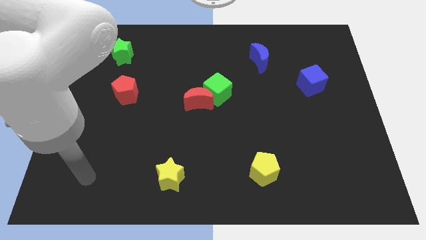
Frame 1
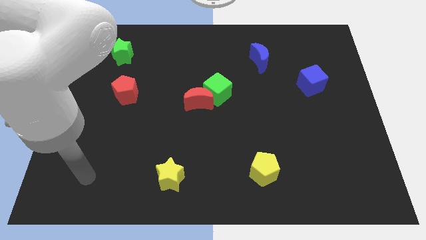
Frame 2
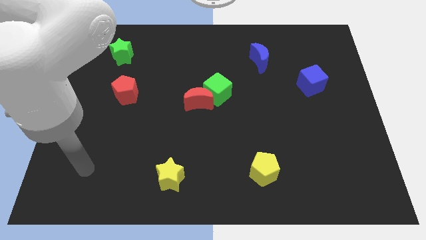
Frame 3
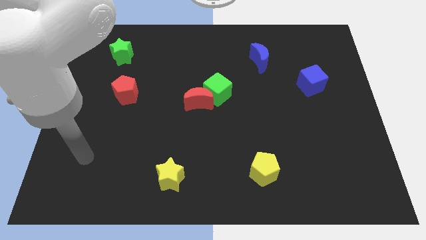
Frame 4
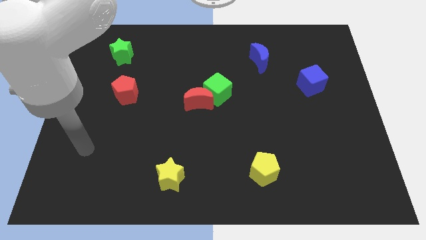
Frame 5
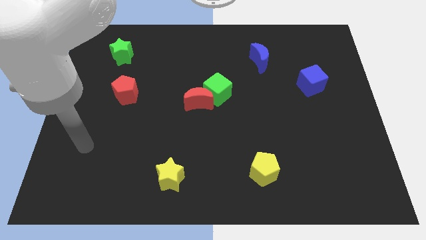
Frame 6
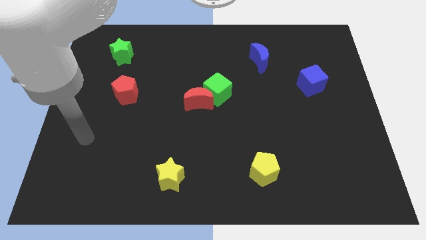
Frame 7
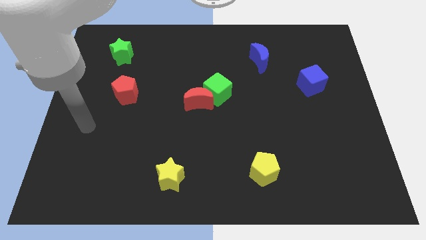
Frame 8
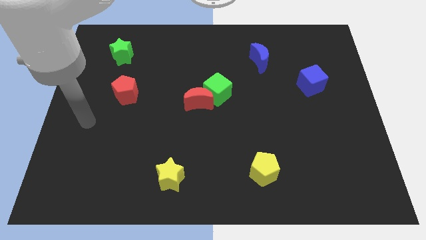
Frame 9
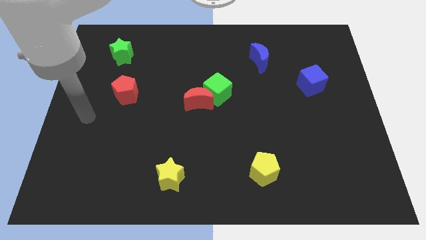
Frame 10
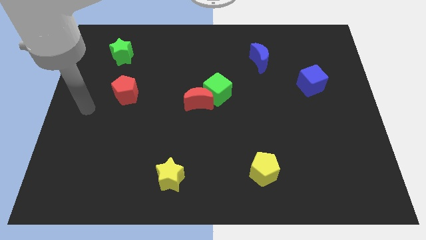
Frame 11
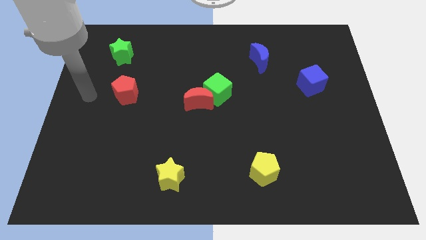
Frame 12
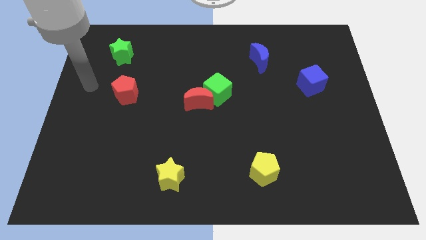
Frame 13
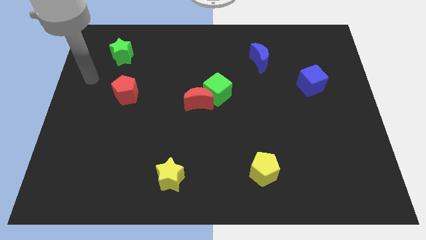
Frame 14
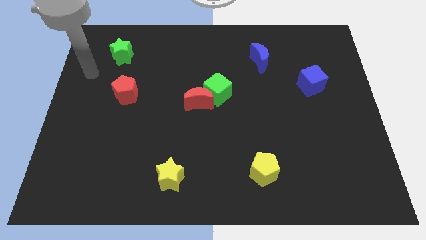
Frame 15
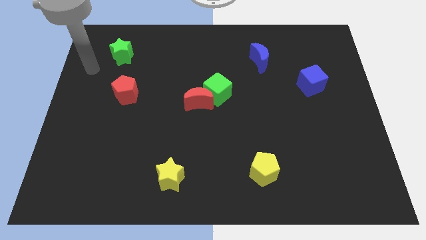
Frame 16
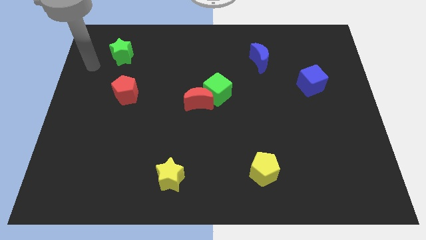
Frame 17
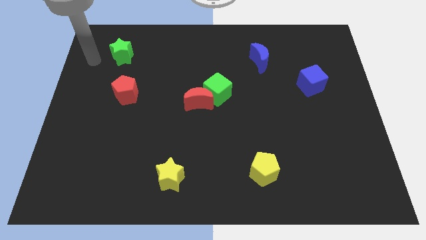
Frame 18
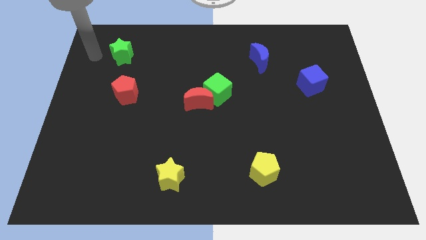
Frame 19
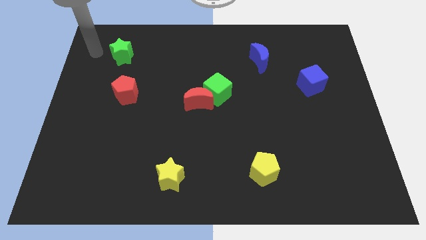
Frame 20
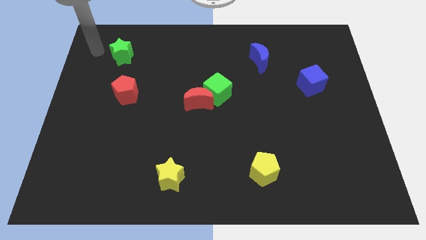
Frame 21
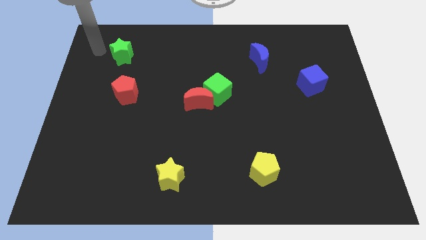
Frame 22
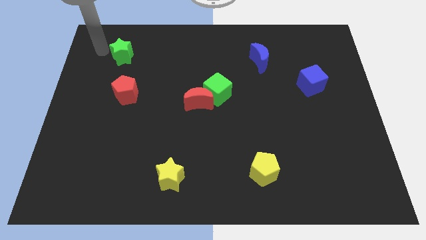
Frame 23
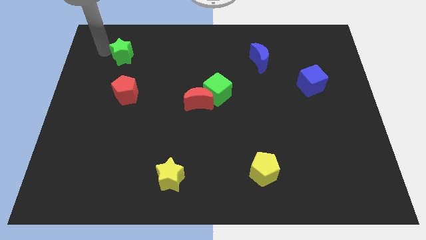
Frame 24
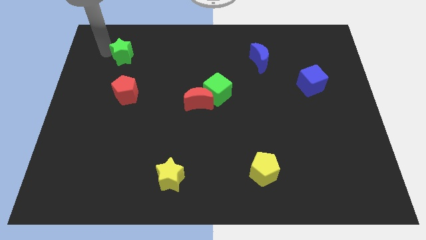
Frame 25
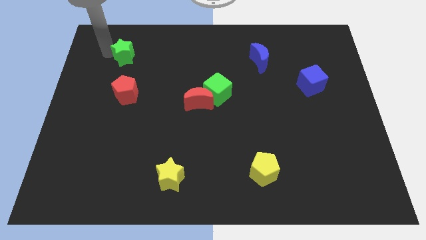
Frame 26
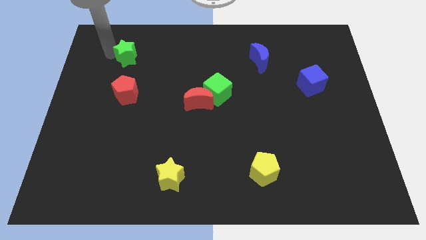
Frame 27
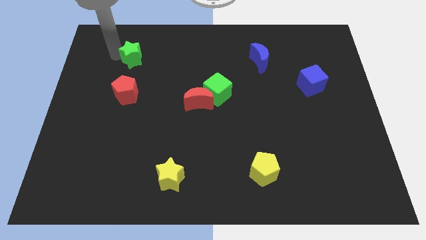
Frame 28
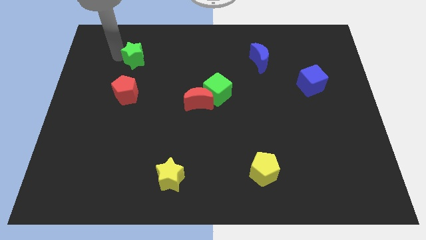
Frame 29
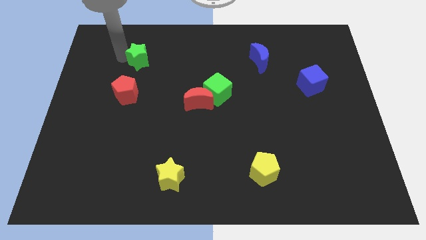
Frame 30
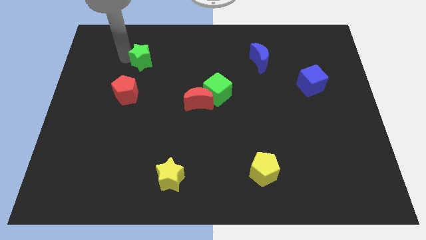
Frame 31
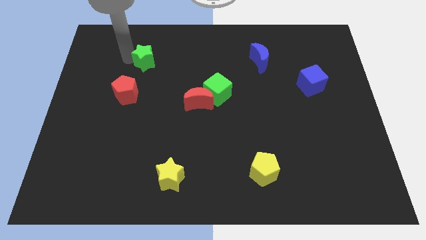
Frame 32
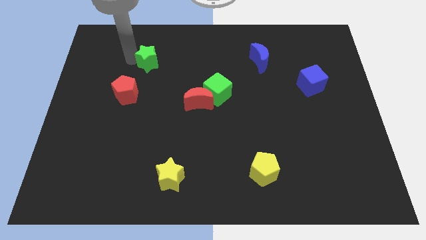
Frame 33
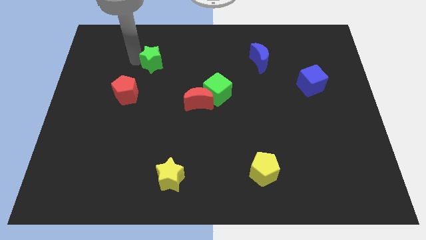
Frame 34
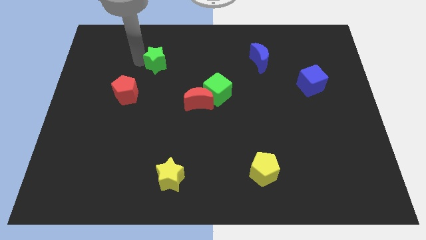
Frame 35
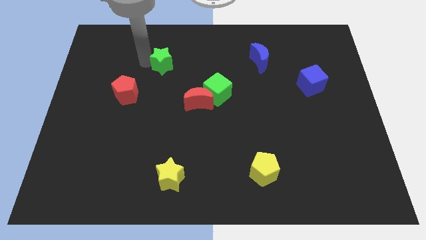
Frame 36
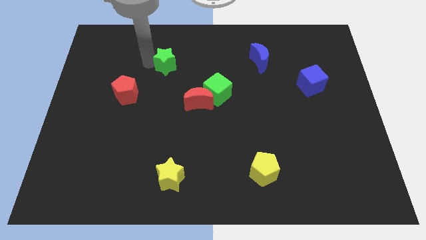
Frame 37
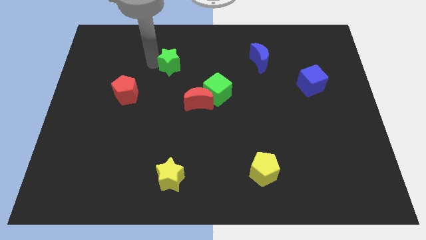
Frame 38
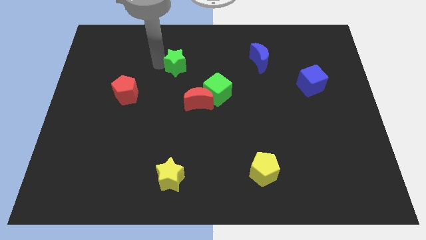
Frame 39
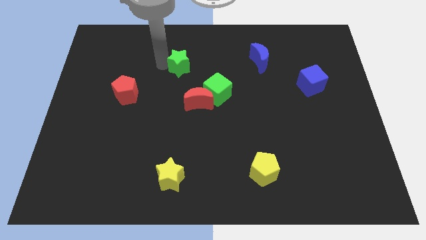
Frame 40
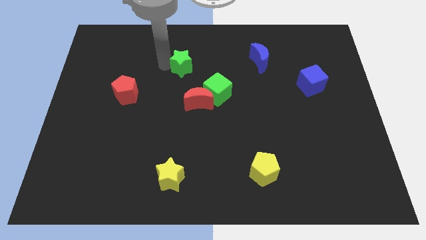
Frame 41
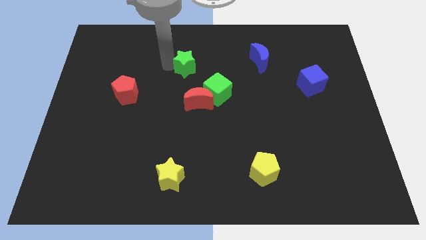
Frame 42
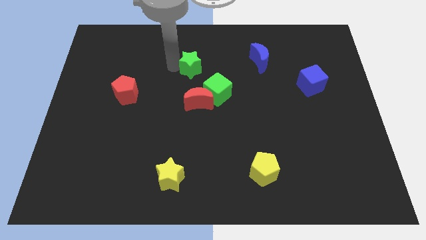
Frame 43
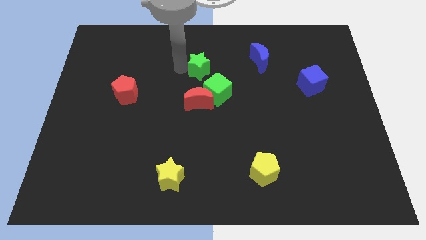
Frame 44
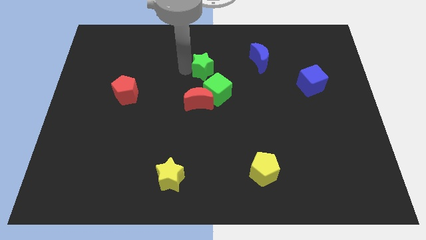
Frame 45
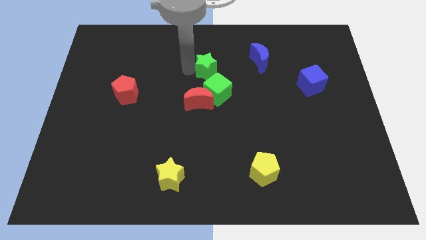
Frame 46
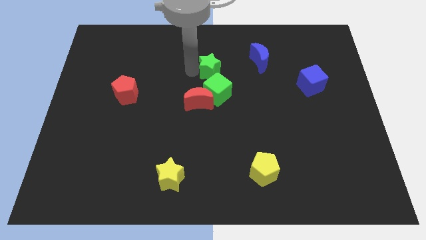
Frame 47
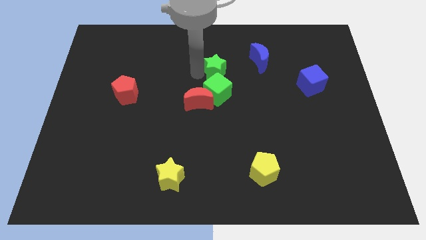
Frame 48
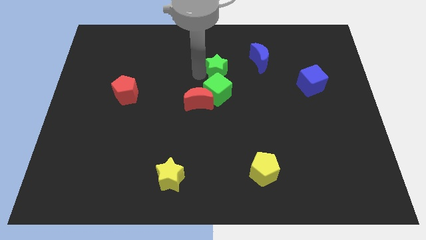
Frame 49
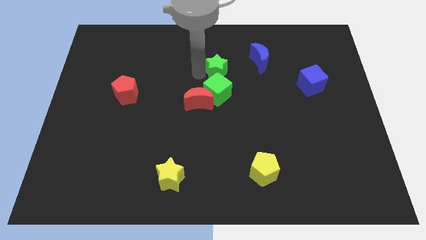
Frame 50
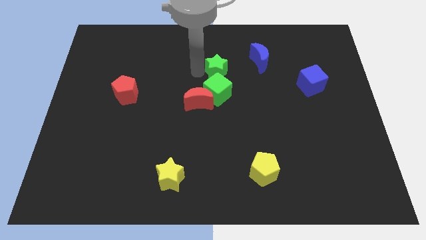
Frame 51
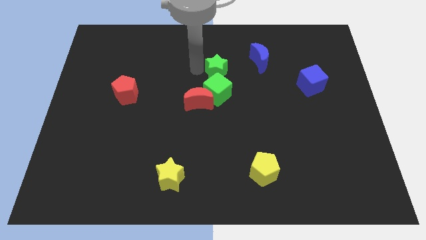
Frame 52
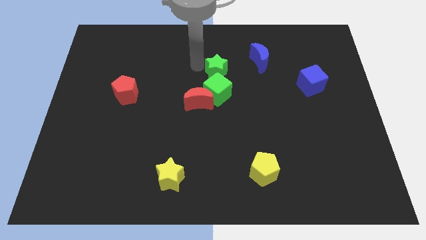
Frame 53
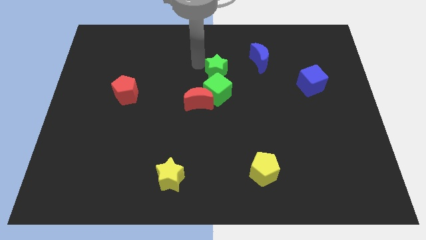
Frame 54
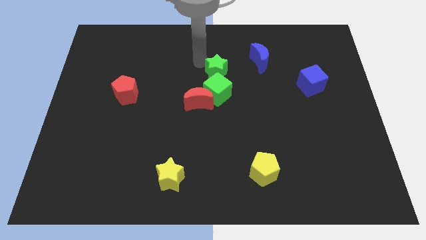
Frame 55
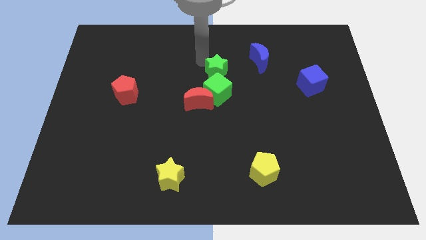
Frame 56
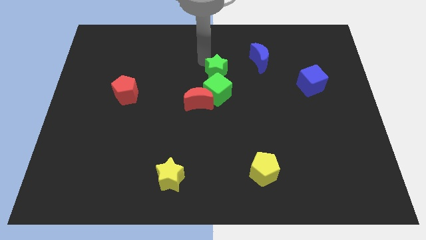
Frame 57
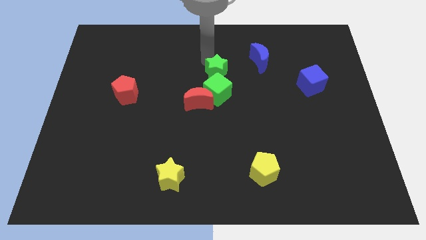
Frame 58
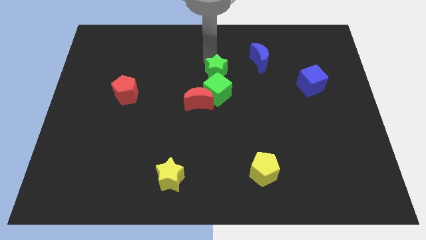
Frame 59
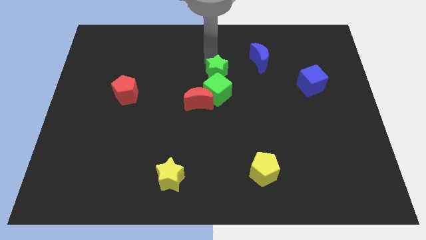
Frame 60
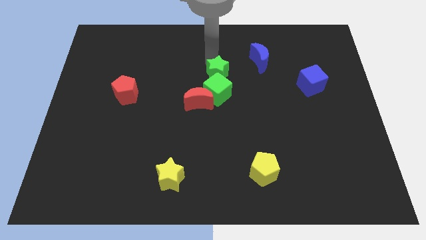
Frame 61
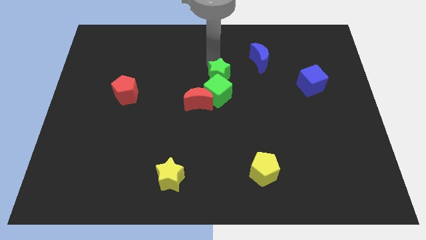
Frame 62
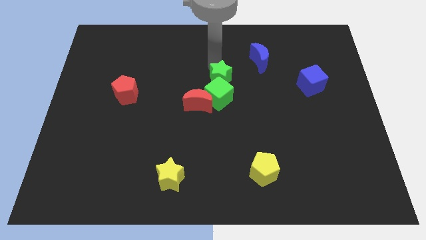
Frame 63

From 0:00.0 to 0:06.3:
push the green star close to the green cube

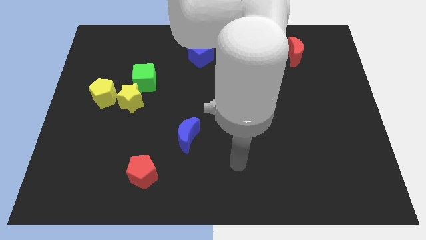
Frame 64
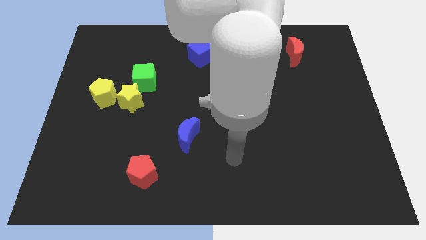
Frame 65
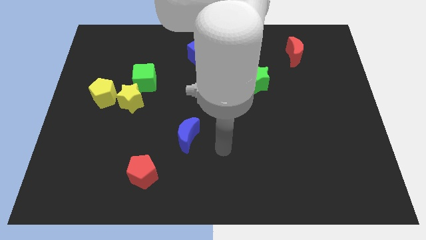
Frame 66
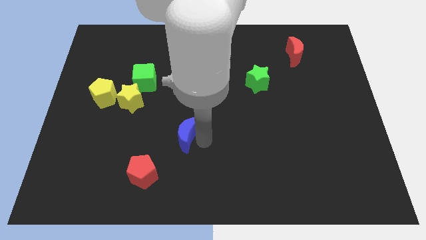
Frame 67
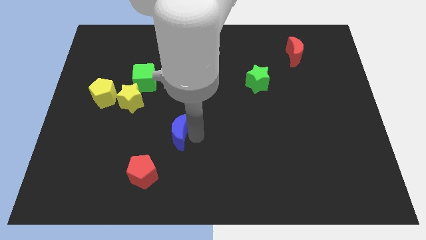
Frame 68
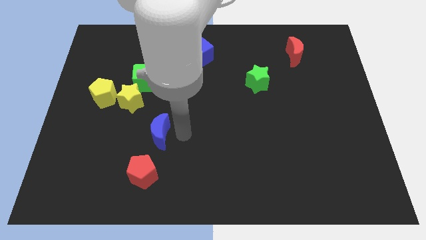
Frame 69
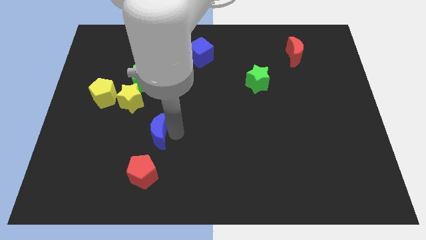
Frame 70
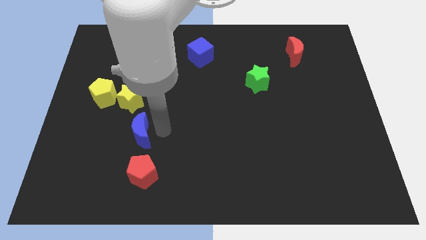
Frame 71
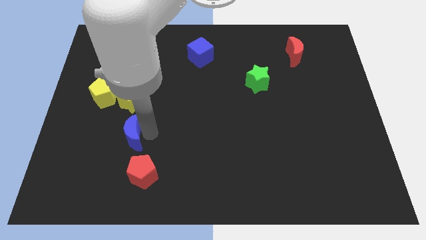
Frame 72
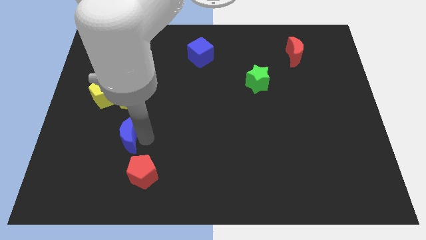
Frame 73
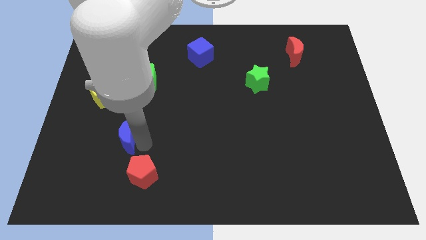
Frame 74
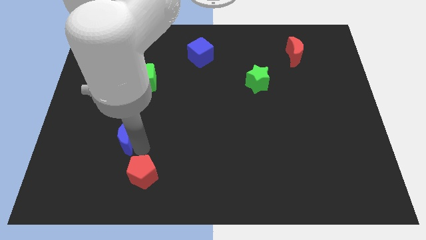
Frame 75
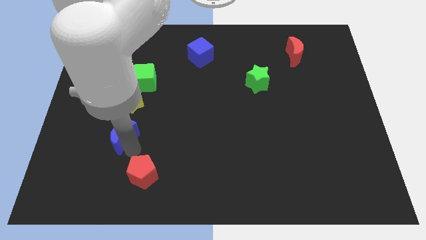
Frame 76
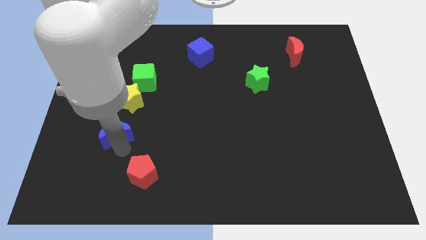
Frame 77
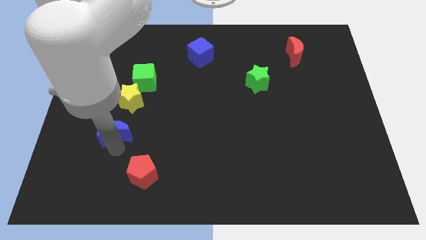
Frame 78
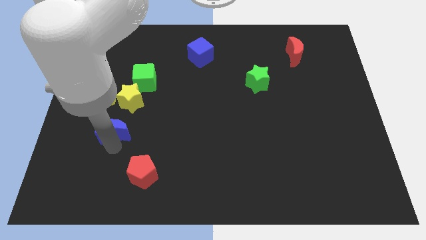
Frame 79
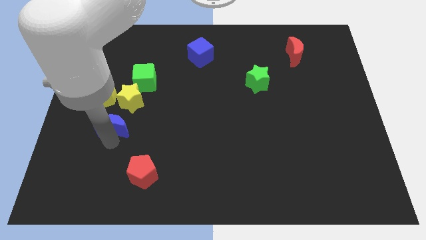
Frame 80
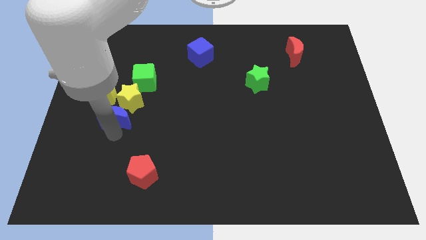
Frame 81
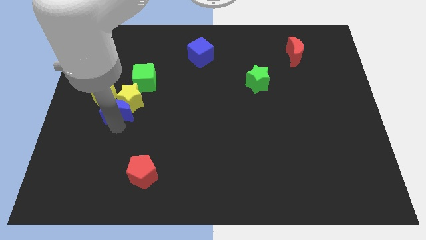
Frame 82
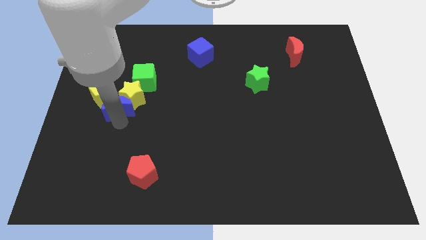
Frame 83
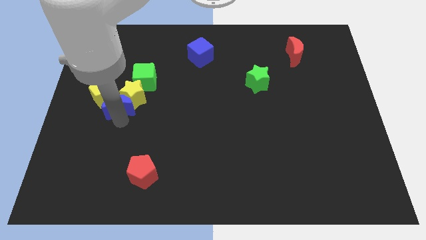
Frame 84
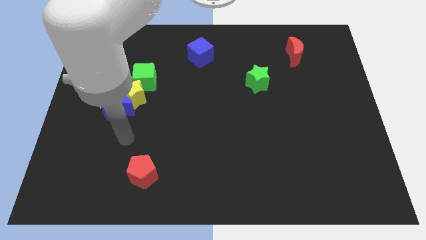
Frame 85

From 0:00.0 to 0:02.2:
push the blue moon next to the yellow pentagon
